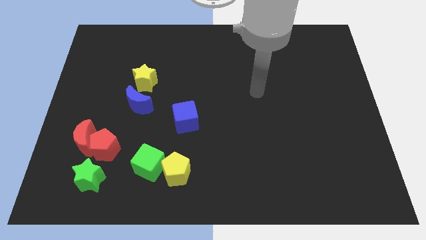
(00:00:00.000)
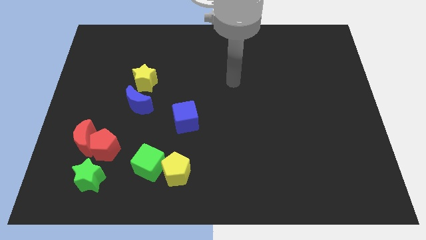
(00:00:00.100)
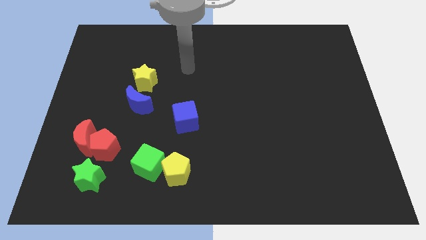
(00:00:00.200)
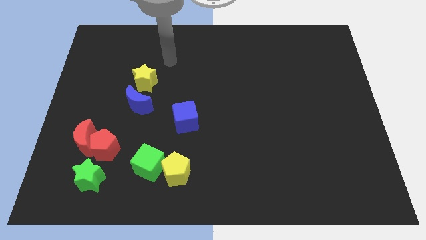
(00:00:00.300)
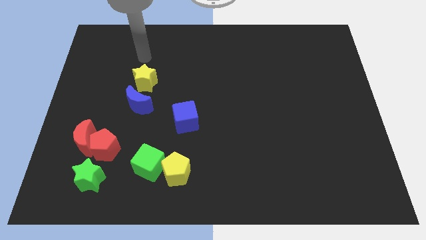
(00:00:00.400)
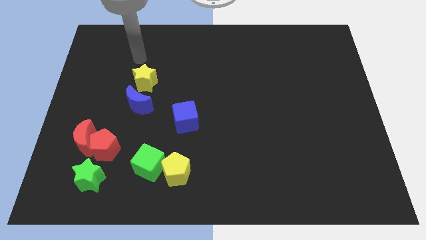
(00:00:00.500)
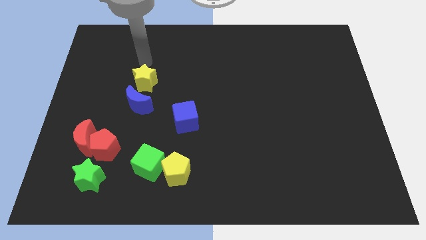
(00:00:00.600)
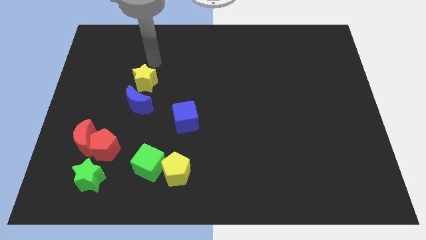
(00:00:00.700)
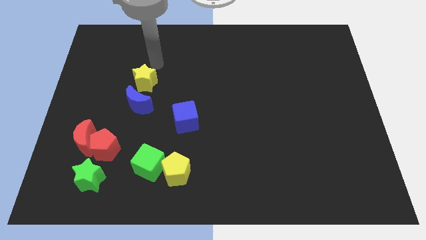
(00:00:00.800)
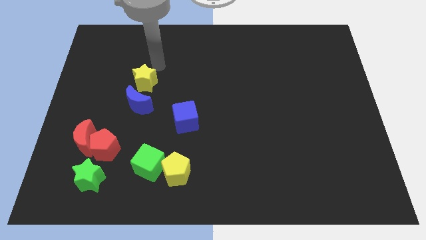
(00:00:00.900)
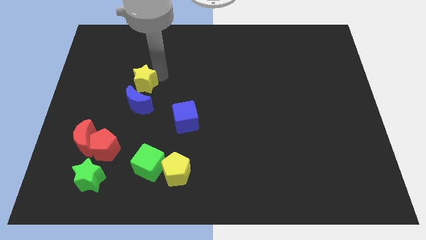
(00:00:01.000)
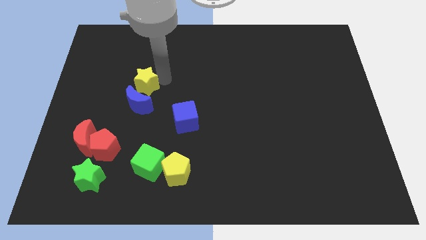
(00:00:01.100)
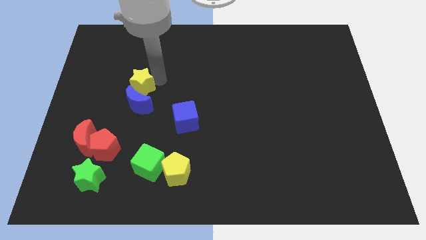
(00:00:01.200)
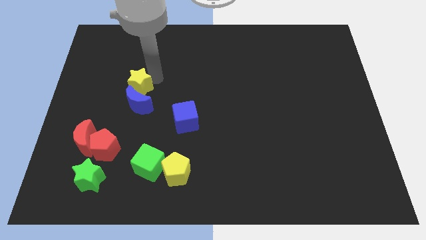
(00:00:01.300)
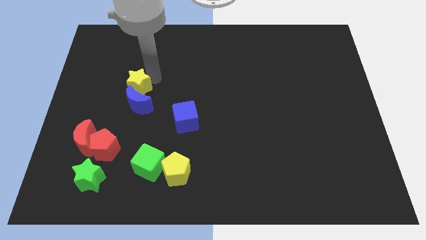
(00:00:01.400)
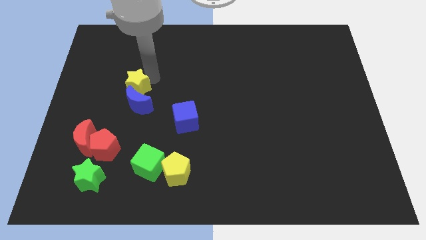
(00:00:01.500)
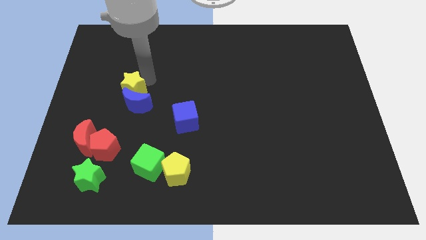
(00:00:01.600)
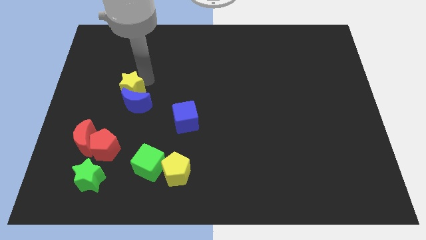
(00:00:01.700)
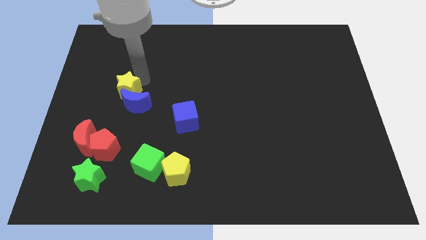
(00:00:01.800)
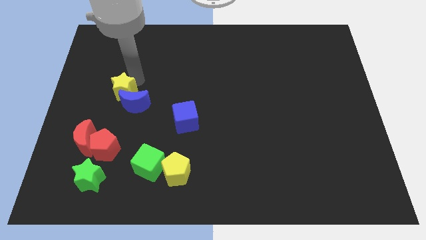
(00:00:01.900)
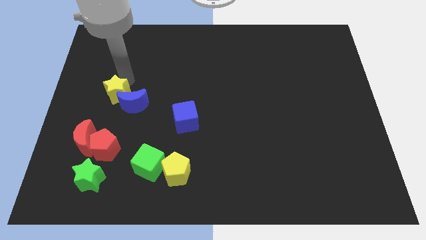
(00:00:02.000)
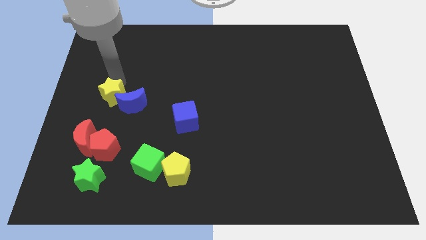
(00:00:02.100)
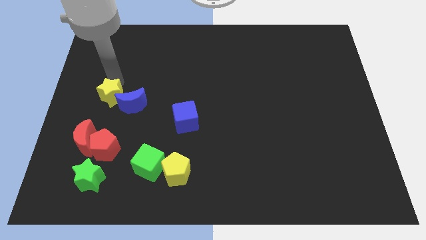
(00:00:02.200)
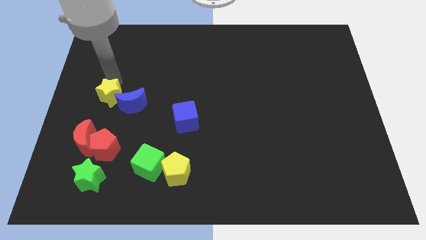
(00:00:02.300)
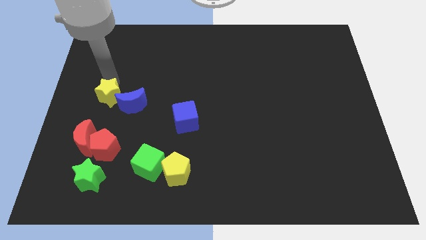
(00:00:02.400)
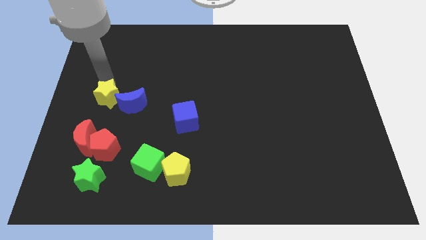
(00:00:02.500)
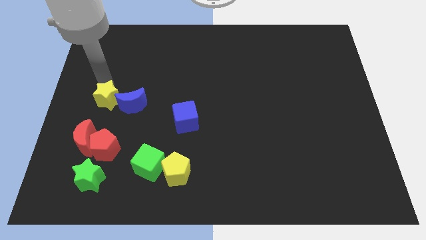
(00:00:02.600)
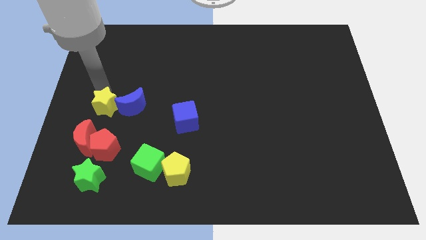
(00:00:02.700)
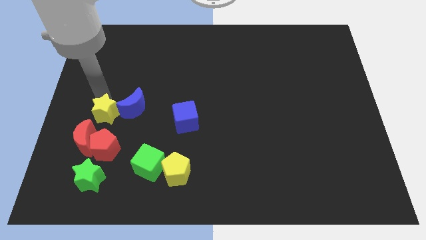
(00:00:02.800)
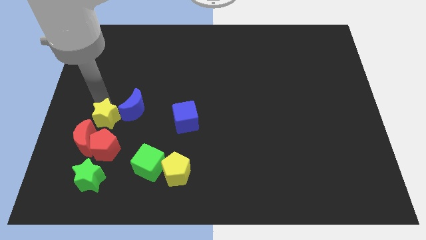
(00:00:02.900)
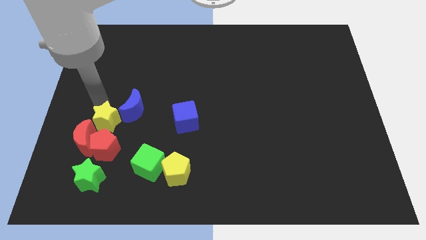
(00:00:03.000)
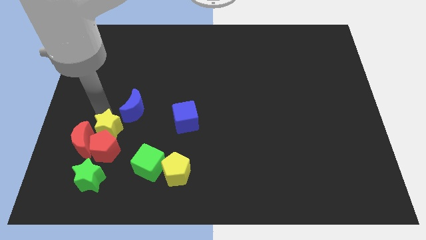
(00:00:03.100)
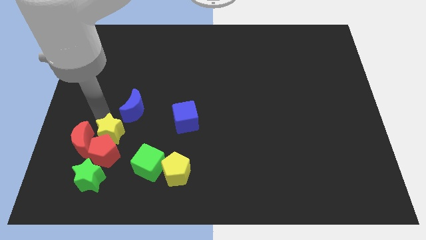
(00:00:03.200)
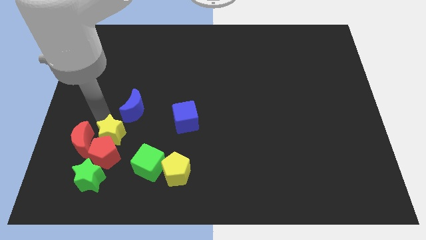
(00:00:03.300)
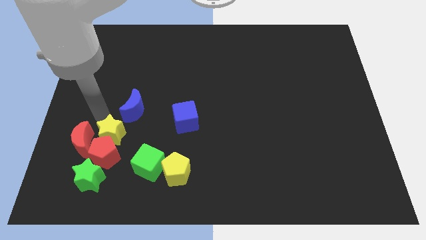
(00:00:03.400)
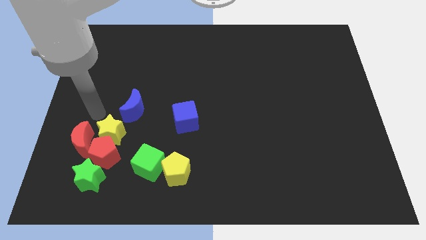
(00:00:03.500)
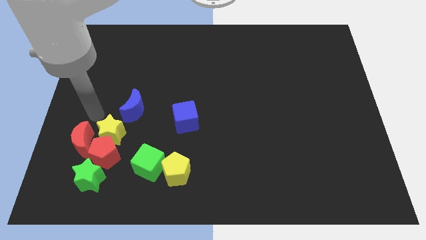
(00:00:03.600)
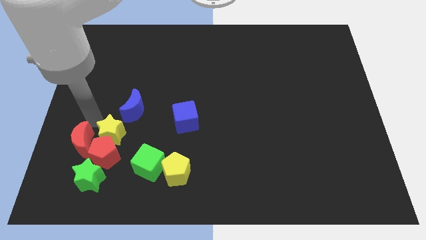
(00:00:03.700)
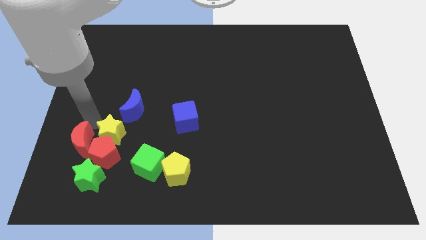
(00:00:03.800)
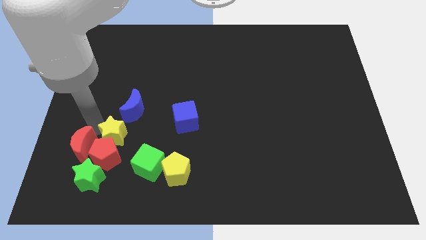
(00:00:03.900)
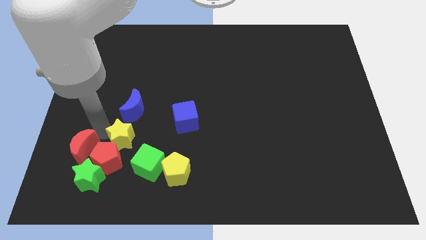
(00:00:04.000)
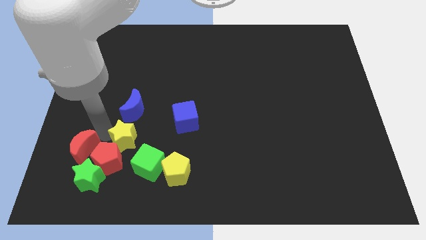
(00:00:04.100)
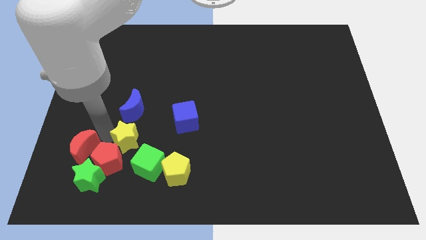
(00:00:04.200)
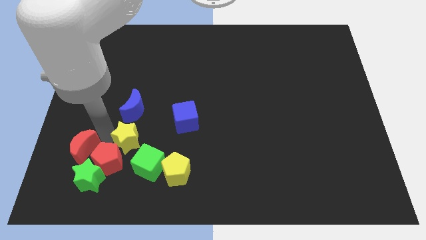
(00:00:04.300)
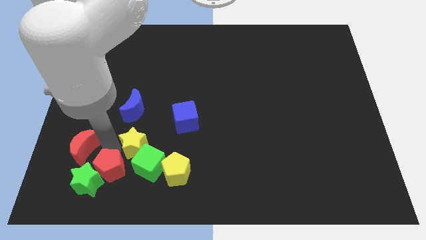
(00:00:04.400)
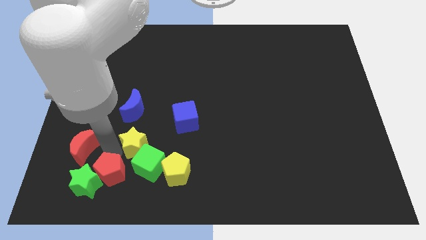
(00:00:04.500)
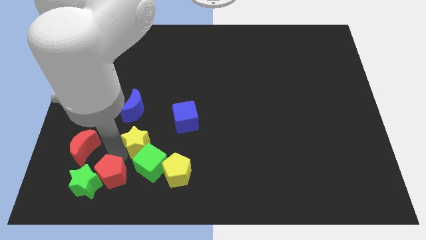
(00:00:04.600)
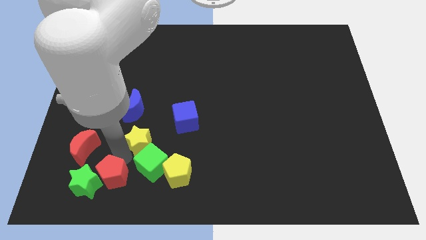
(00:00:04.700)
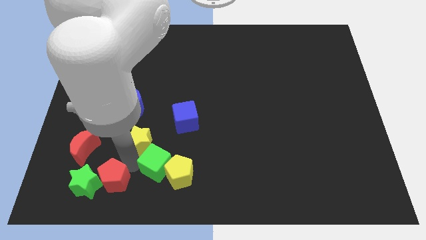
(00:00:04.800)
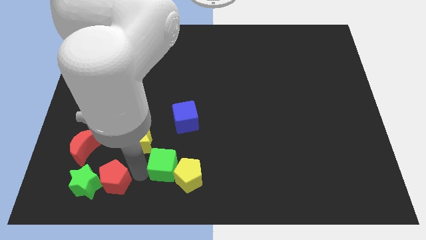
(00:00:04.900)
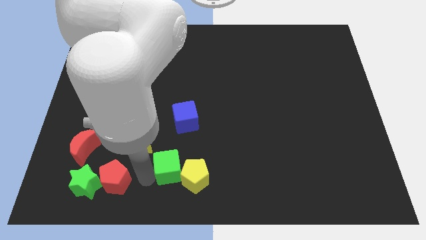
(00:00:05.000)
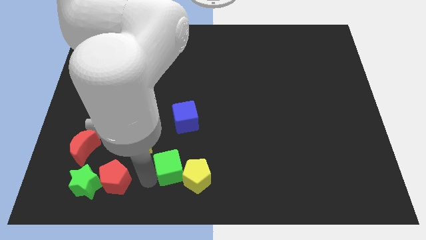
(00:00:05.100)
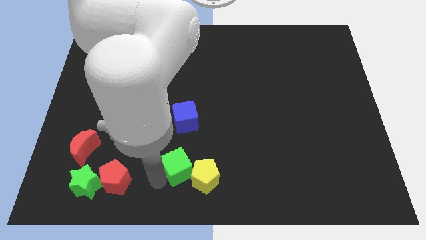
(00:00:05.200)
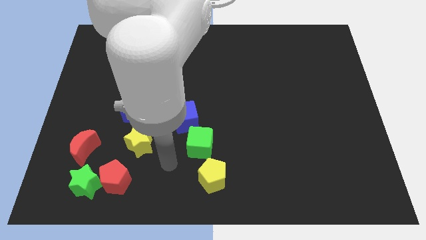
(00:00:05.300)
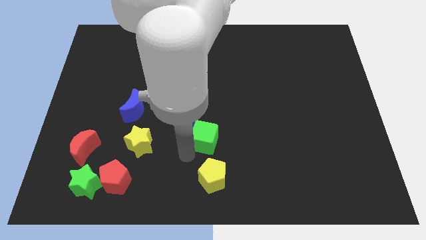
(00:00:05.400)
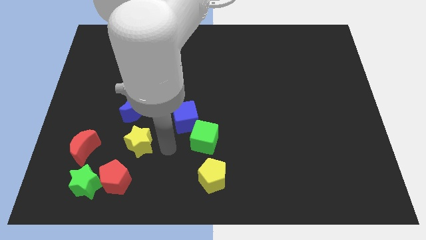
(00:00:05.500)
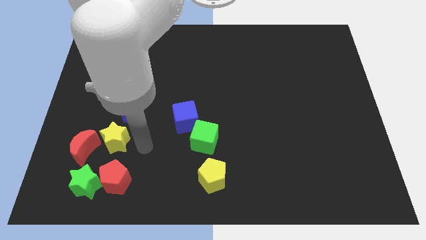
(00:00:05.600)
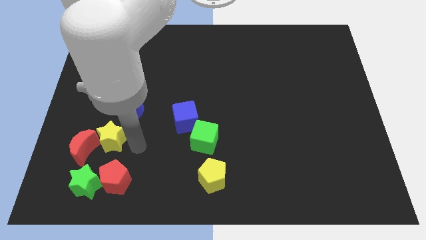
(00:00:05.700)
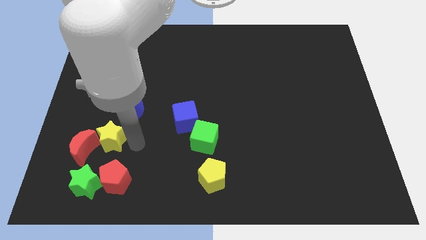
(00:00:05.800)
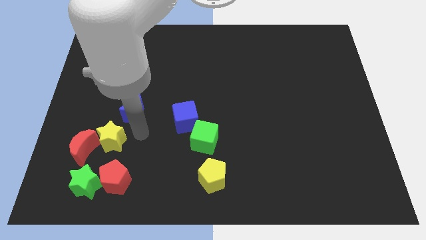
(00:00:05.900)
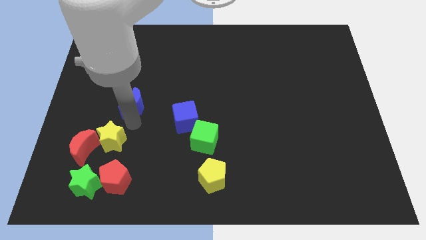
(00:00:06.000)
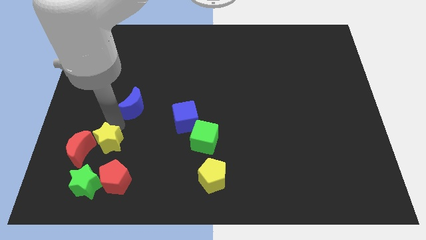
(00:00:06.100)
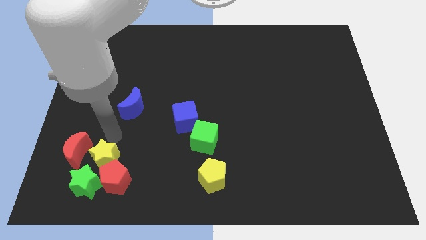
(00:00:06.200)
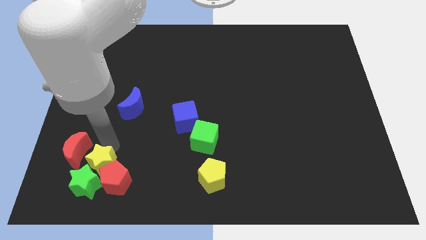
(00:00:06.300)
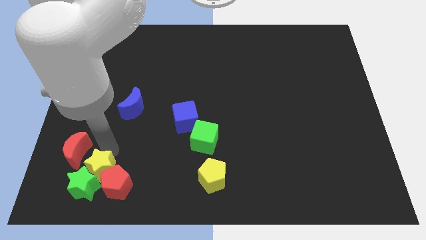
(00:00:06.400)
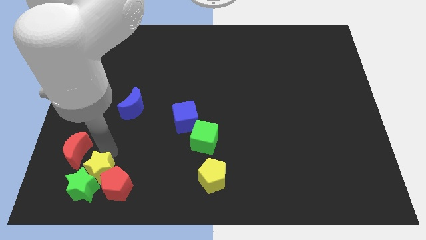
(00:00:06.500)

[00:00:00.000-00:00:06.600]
slide the yellow star next to the green star

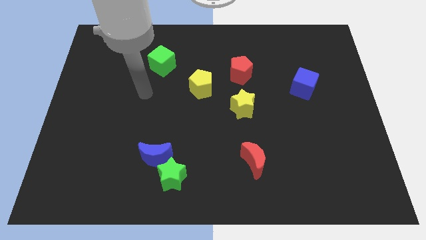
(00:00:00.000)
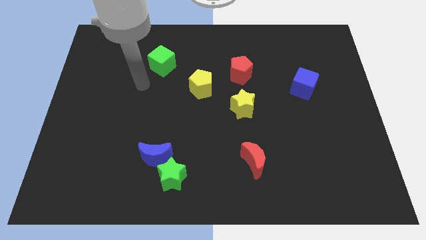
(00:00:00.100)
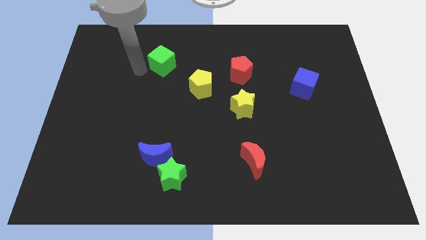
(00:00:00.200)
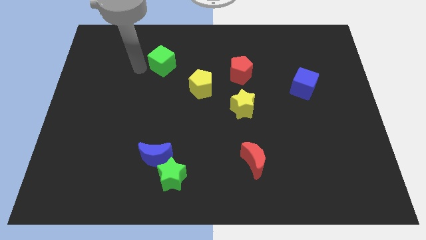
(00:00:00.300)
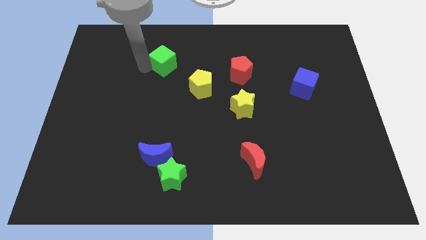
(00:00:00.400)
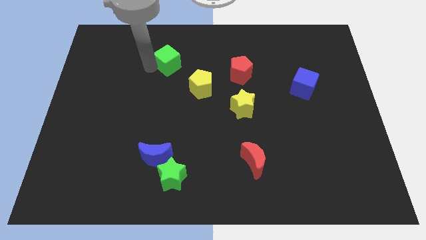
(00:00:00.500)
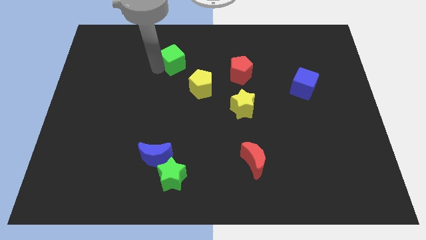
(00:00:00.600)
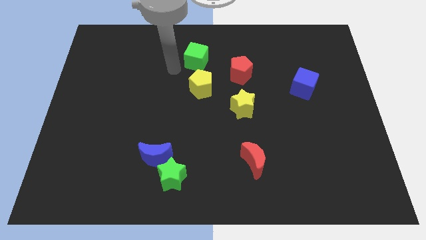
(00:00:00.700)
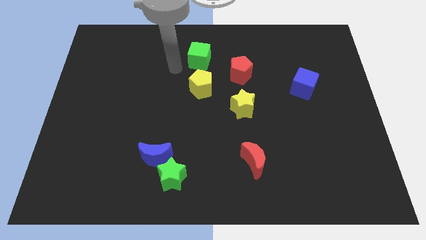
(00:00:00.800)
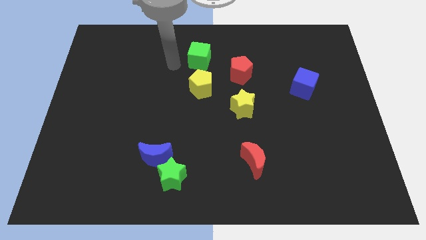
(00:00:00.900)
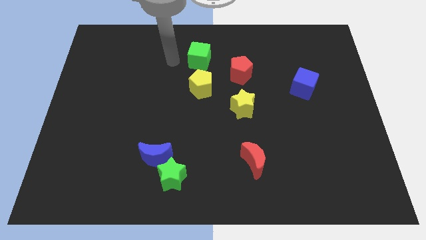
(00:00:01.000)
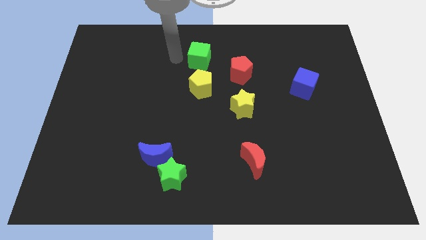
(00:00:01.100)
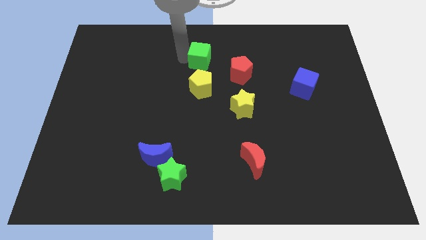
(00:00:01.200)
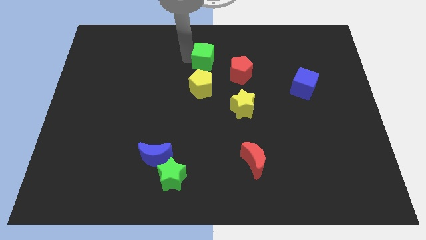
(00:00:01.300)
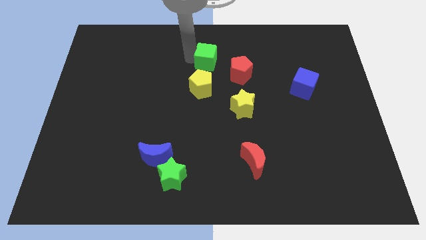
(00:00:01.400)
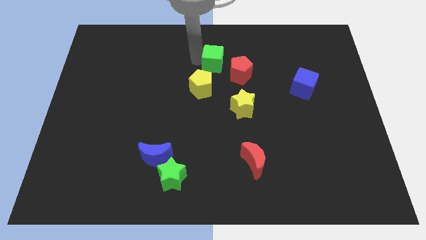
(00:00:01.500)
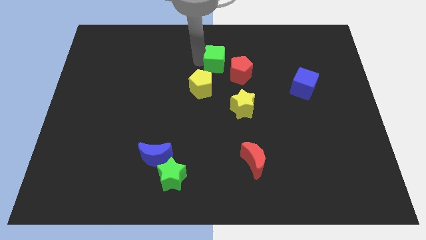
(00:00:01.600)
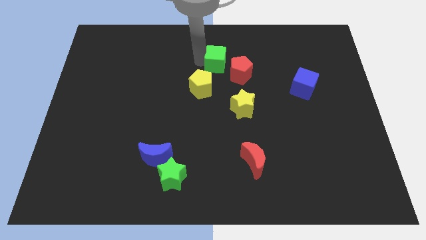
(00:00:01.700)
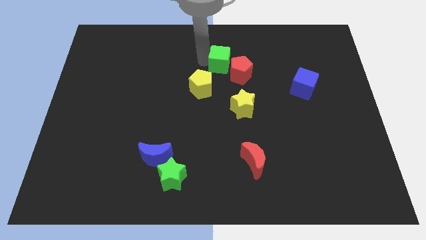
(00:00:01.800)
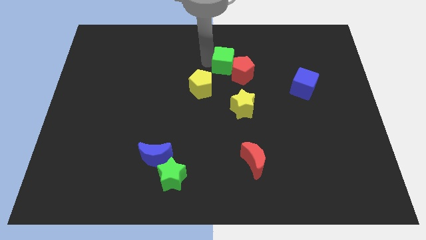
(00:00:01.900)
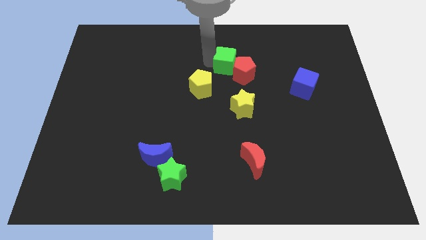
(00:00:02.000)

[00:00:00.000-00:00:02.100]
slide the green cube next to the red pentagon
